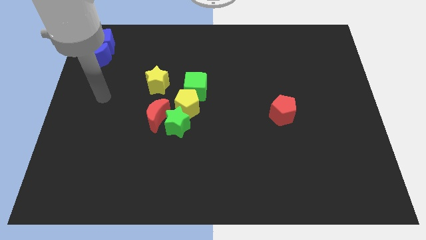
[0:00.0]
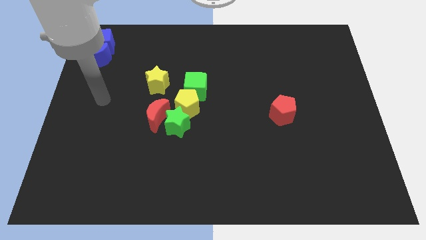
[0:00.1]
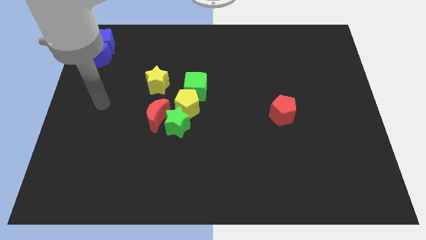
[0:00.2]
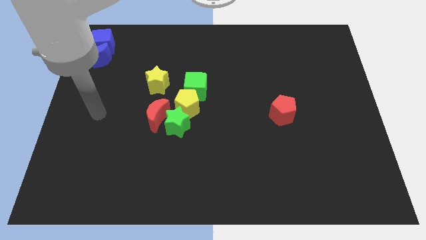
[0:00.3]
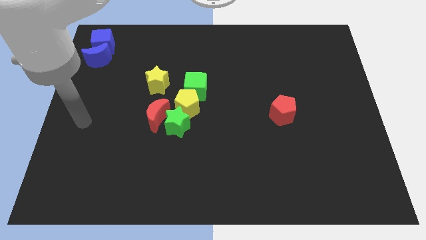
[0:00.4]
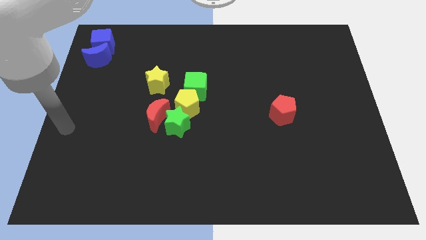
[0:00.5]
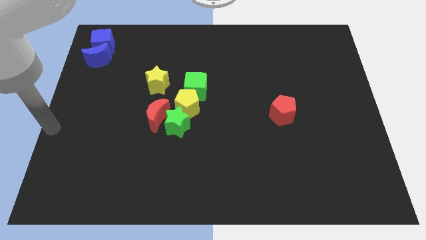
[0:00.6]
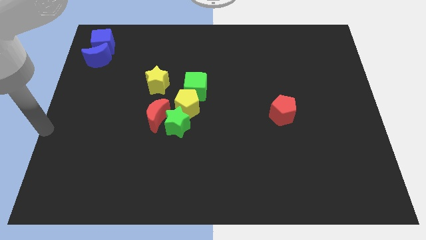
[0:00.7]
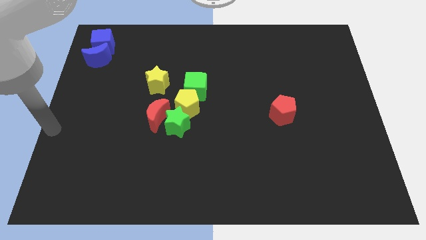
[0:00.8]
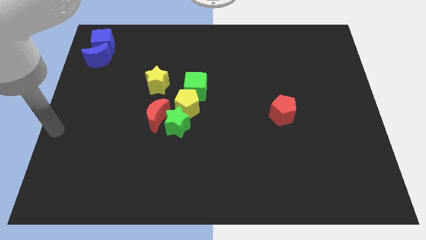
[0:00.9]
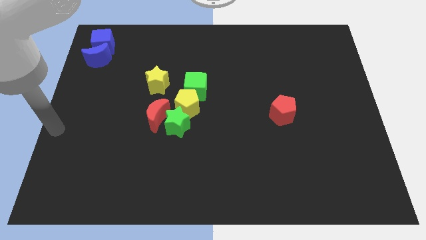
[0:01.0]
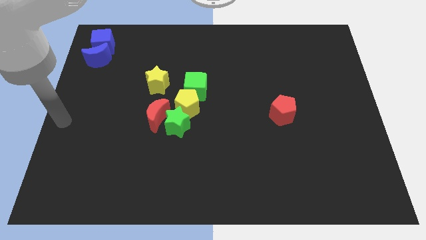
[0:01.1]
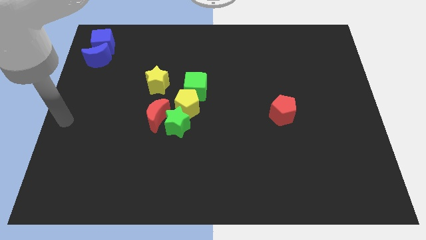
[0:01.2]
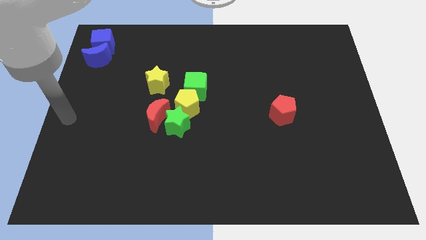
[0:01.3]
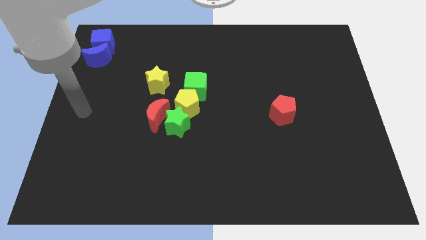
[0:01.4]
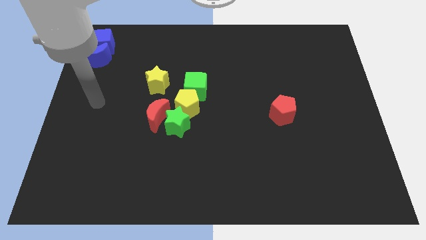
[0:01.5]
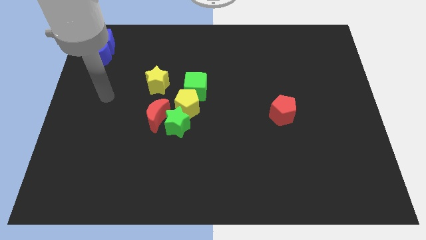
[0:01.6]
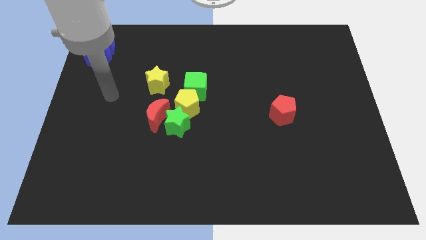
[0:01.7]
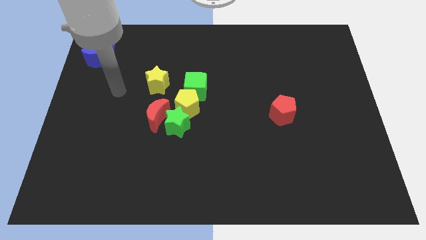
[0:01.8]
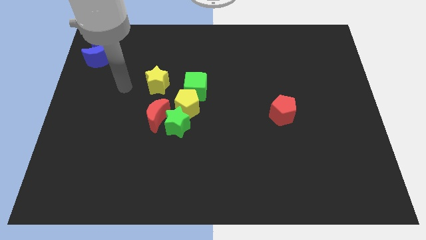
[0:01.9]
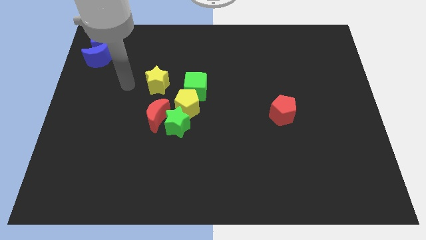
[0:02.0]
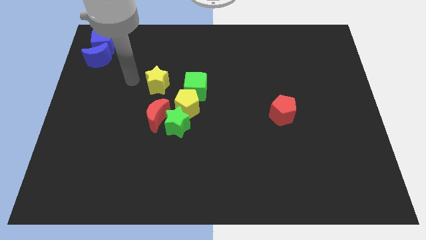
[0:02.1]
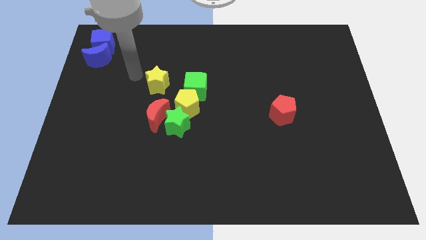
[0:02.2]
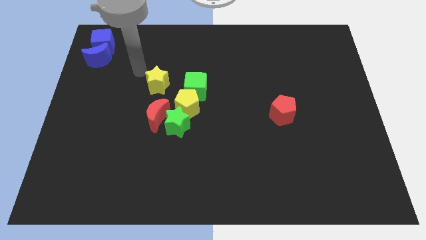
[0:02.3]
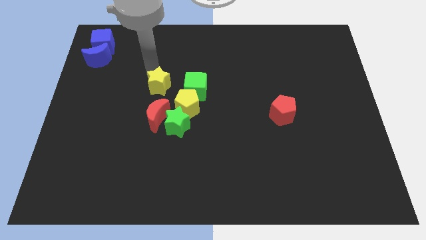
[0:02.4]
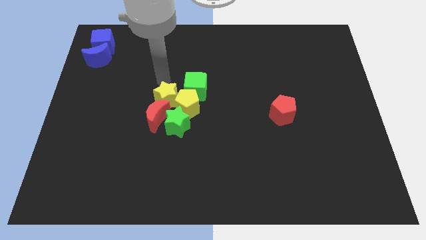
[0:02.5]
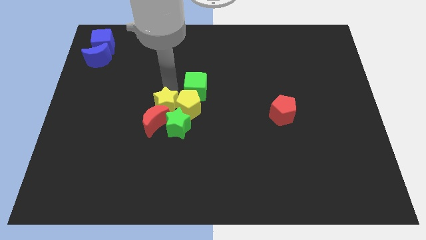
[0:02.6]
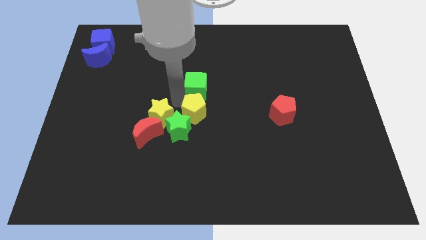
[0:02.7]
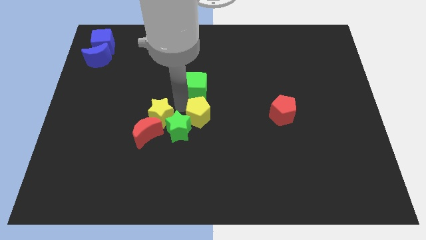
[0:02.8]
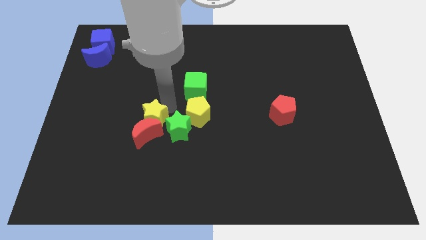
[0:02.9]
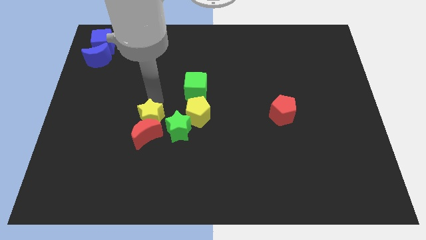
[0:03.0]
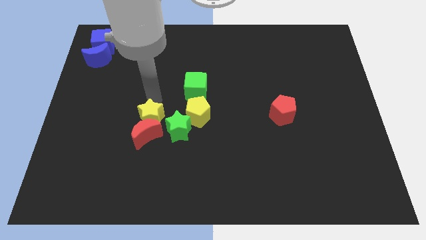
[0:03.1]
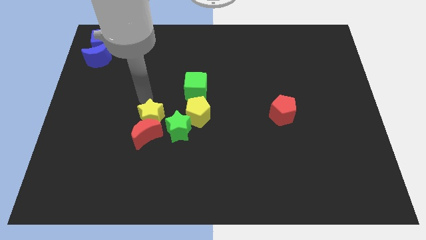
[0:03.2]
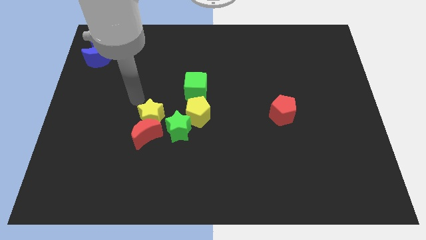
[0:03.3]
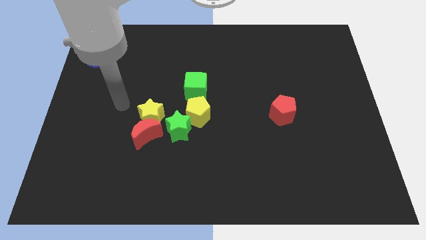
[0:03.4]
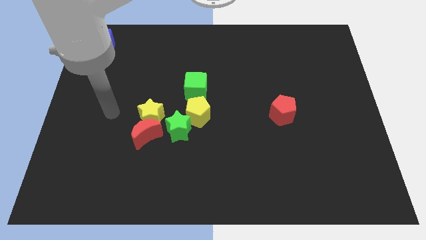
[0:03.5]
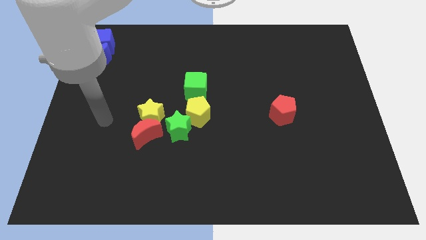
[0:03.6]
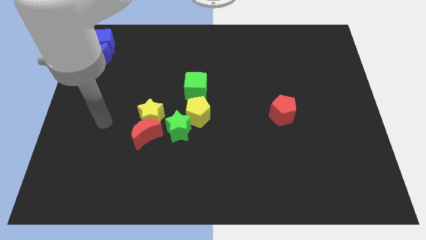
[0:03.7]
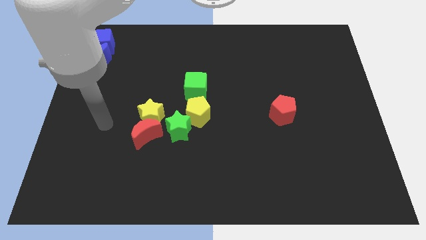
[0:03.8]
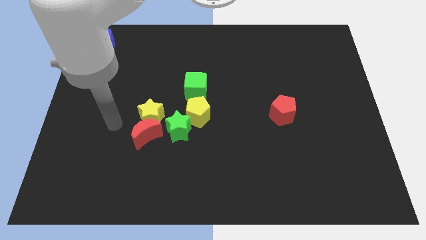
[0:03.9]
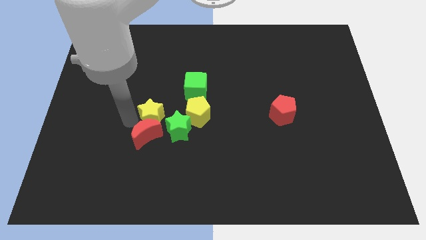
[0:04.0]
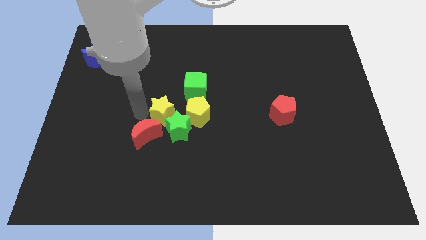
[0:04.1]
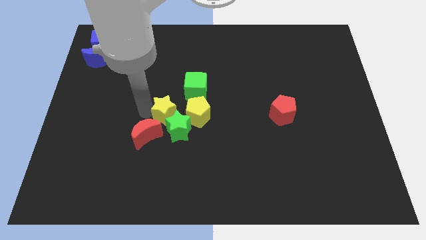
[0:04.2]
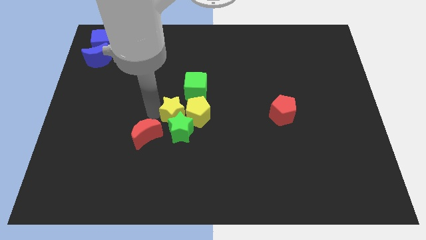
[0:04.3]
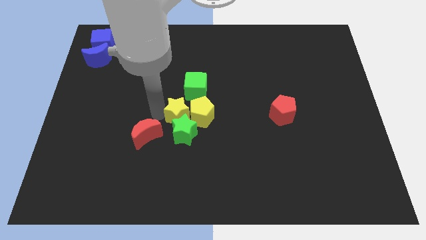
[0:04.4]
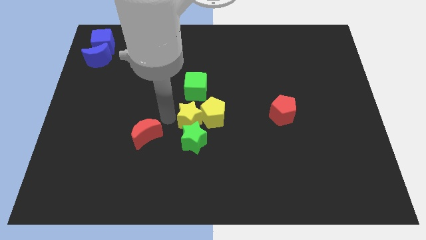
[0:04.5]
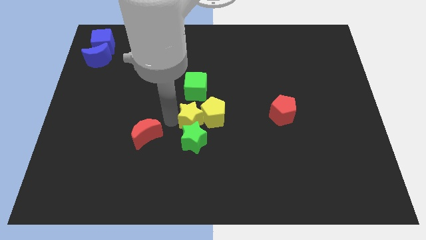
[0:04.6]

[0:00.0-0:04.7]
push the yellow star into the group in between the green cube and green star vertically

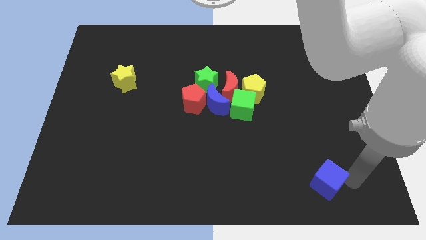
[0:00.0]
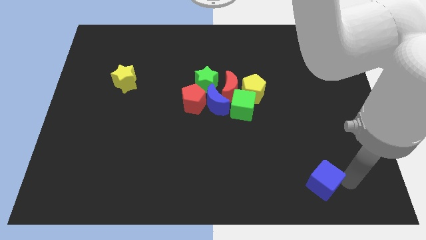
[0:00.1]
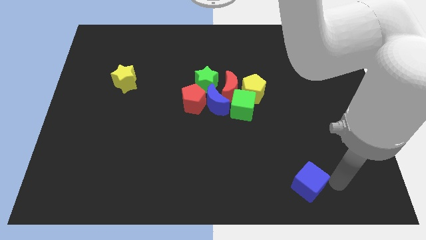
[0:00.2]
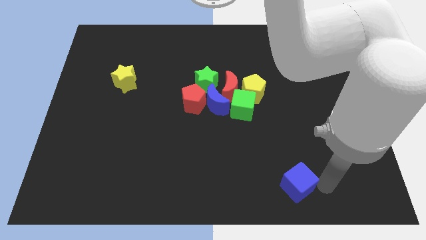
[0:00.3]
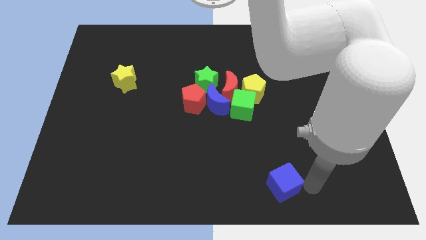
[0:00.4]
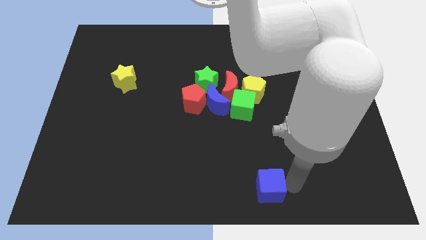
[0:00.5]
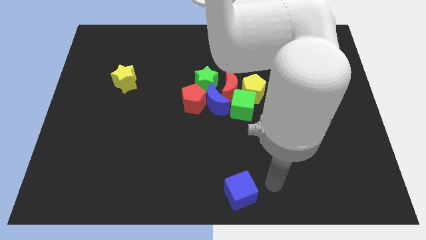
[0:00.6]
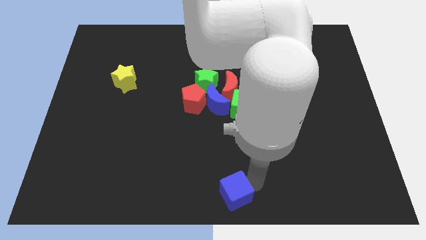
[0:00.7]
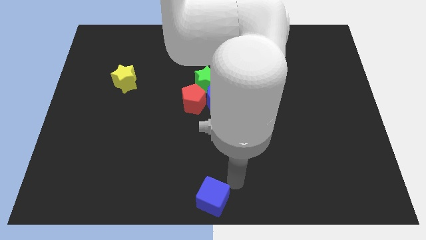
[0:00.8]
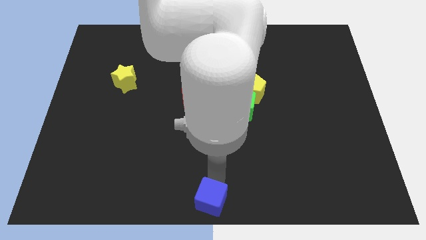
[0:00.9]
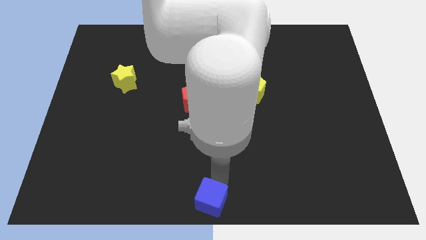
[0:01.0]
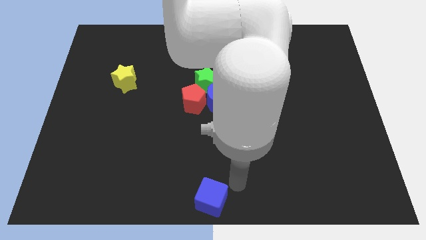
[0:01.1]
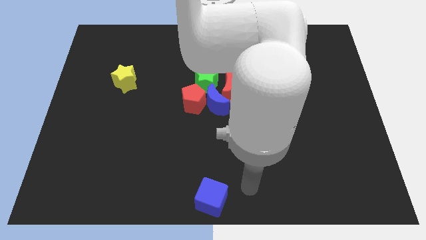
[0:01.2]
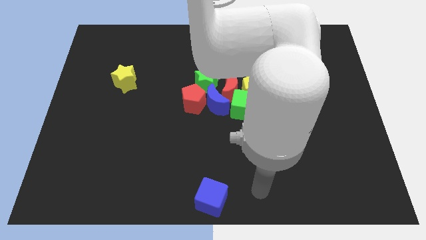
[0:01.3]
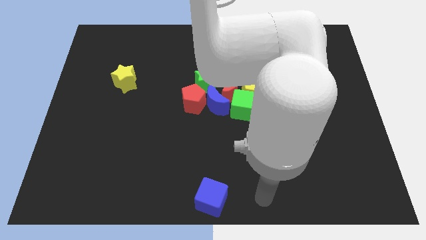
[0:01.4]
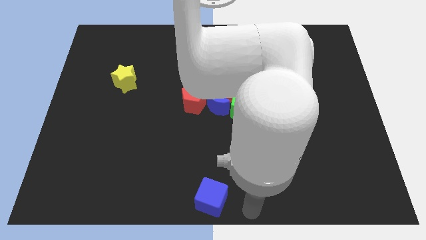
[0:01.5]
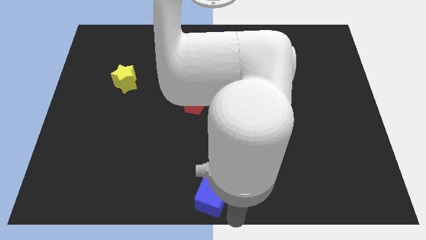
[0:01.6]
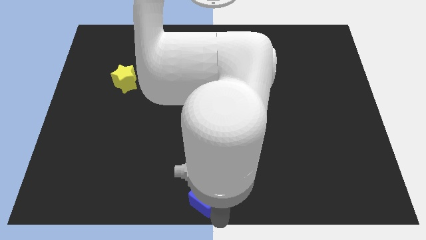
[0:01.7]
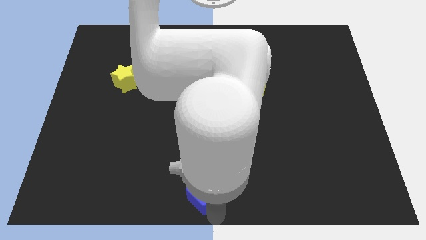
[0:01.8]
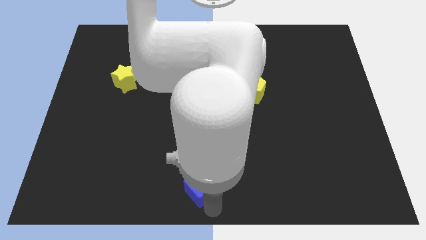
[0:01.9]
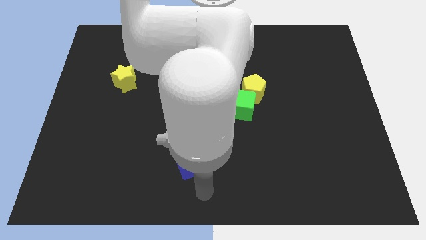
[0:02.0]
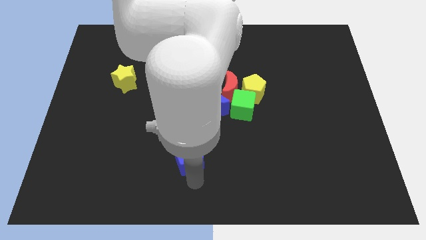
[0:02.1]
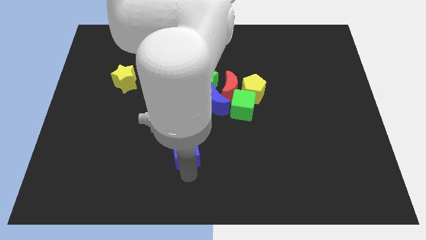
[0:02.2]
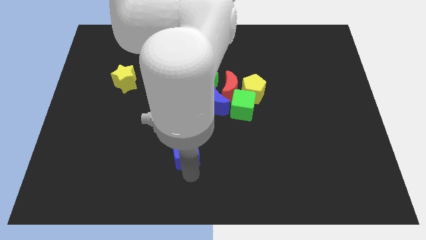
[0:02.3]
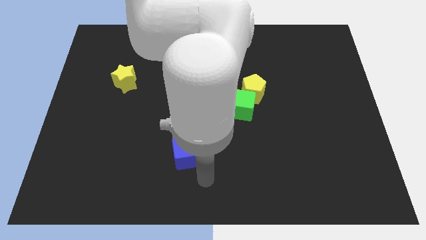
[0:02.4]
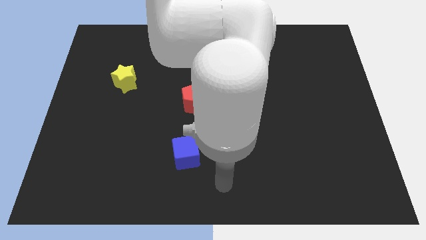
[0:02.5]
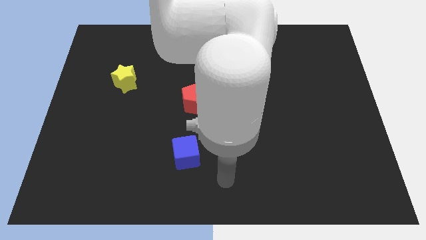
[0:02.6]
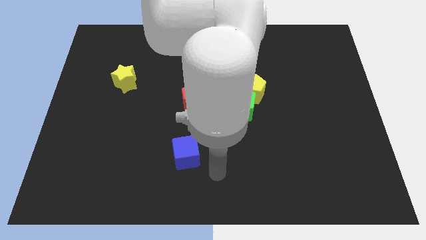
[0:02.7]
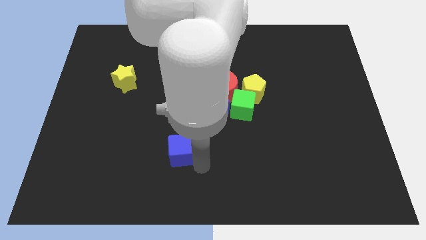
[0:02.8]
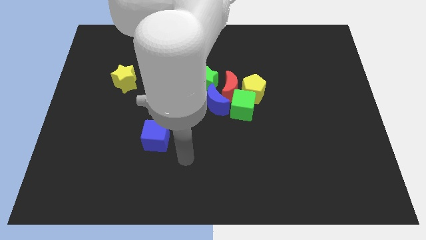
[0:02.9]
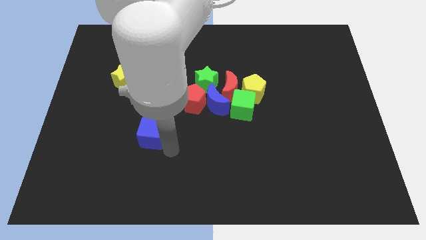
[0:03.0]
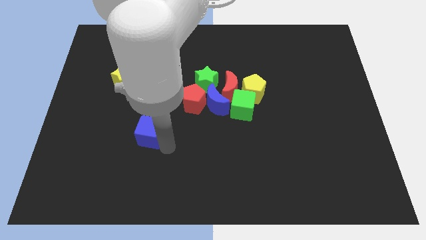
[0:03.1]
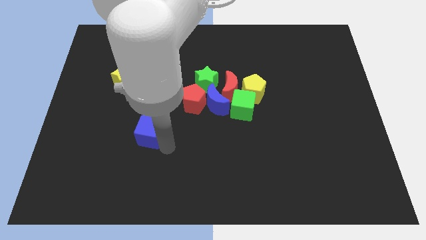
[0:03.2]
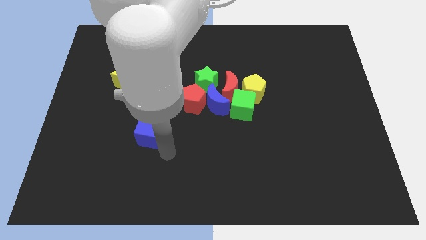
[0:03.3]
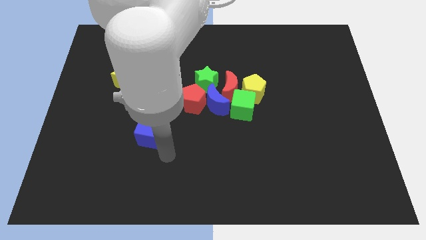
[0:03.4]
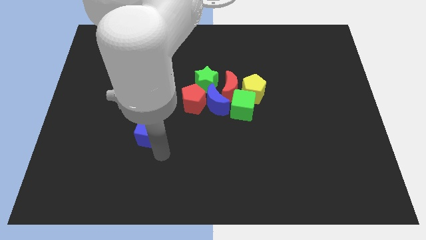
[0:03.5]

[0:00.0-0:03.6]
move the blue cube towards the upwards at the left center

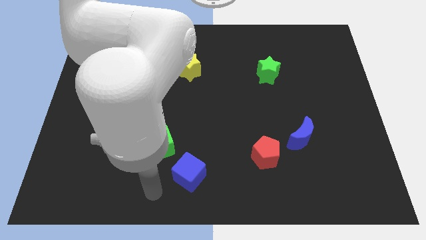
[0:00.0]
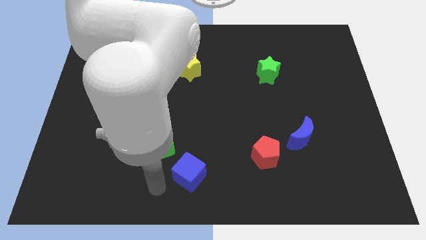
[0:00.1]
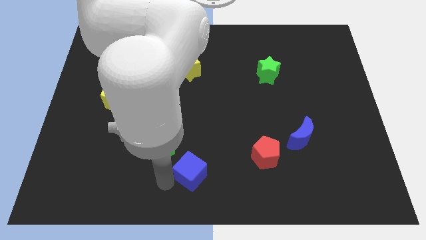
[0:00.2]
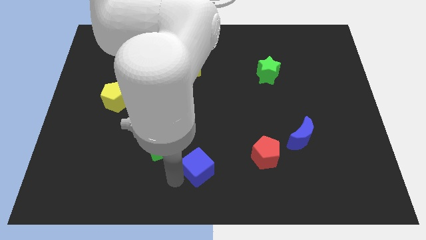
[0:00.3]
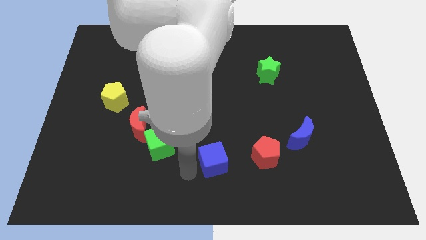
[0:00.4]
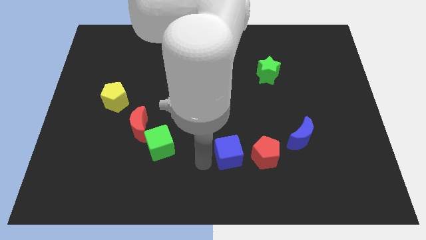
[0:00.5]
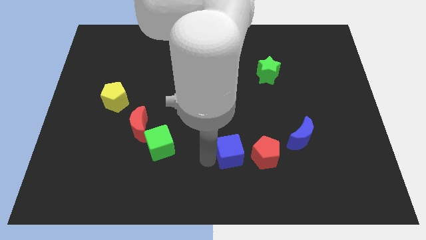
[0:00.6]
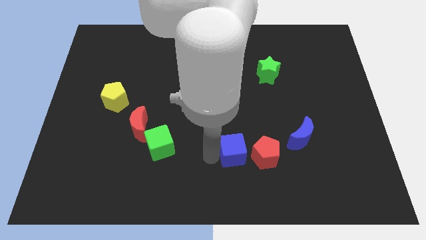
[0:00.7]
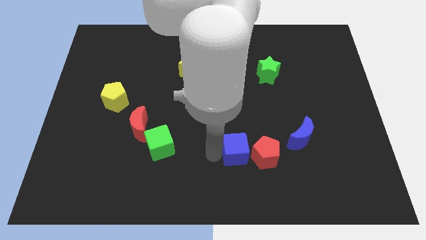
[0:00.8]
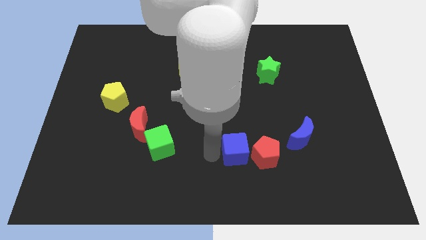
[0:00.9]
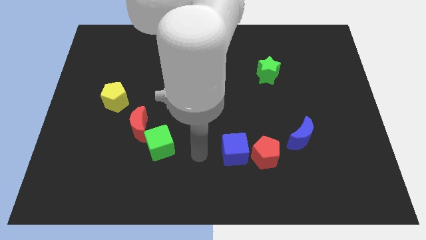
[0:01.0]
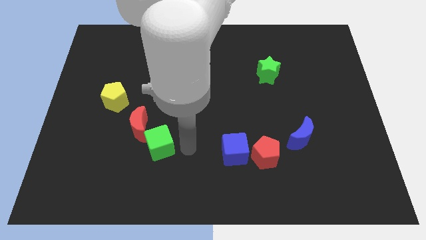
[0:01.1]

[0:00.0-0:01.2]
move the blue cube close to the red pentagon
